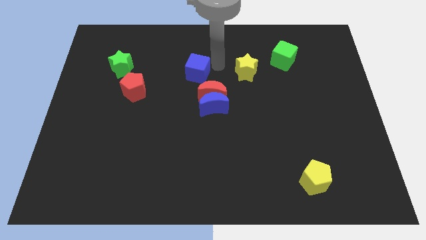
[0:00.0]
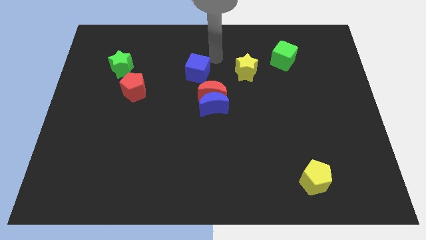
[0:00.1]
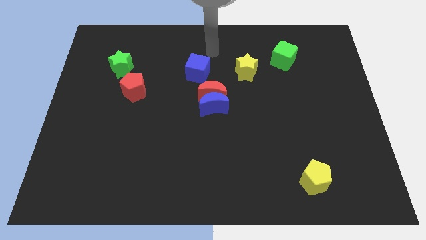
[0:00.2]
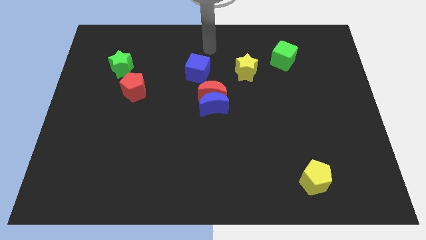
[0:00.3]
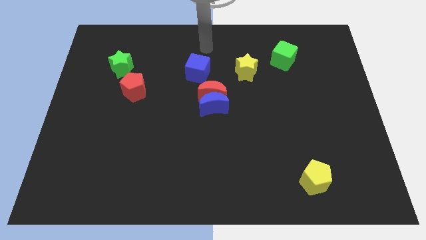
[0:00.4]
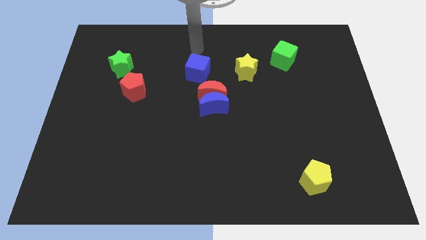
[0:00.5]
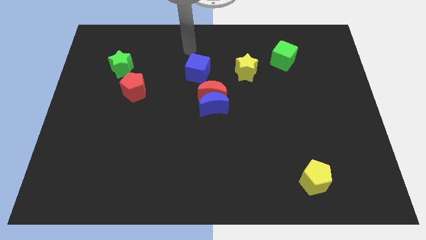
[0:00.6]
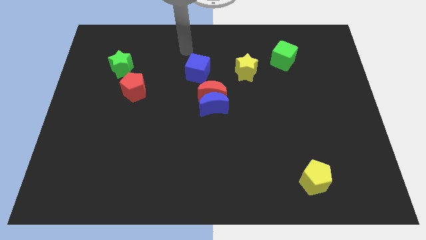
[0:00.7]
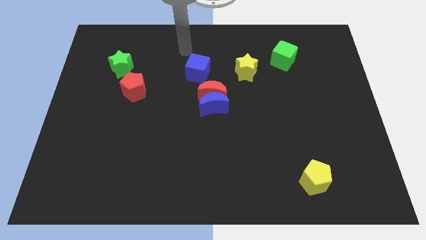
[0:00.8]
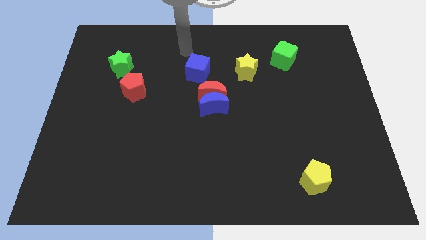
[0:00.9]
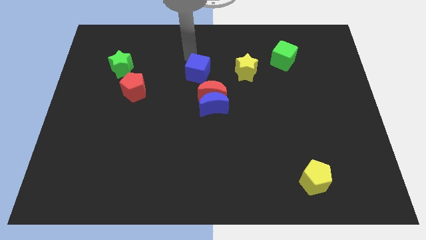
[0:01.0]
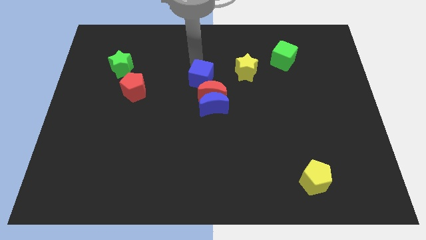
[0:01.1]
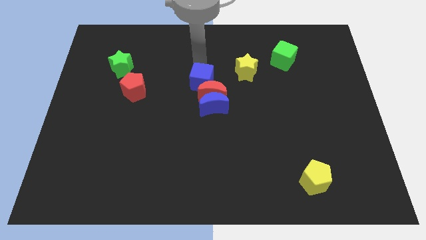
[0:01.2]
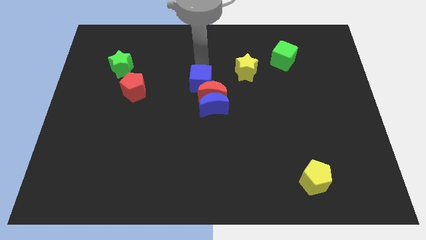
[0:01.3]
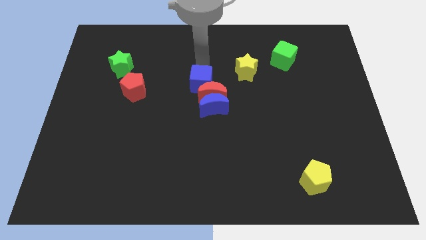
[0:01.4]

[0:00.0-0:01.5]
move blue cube into red moon

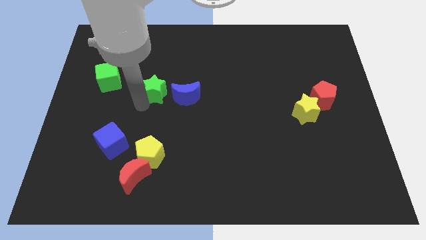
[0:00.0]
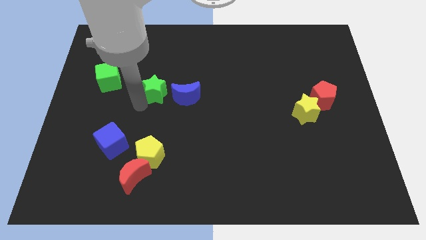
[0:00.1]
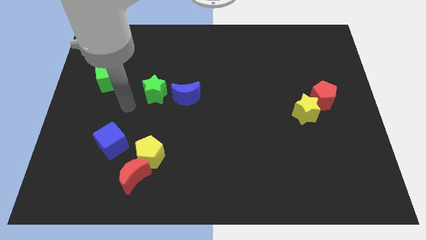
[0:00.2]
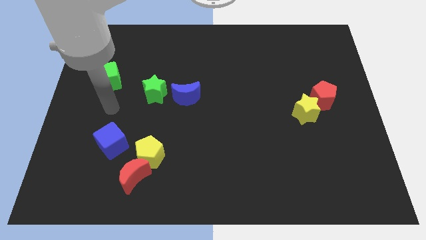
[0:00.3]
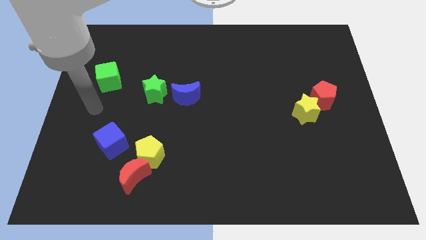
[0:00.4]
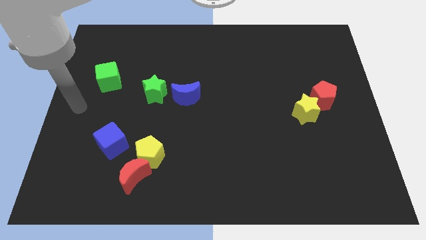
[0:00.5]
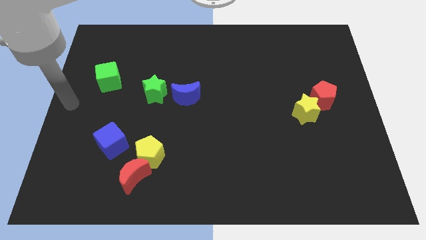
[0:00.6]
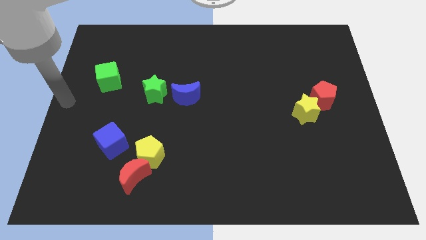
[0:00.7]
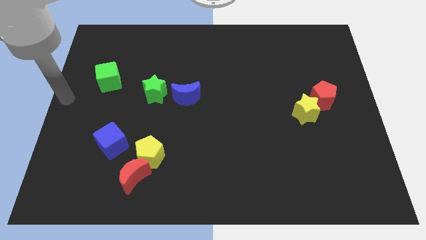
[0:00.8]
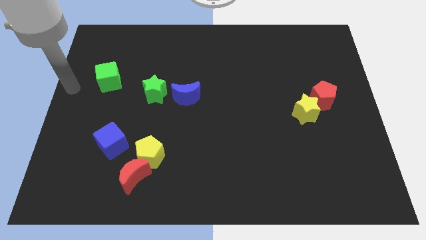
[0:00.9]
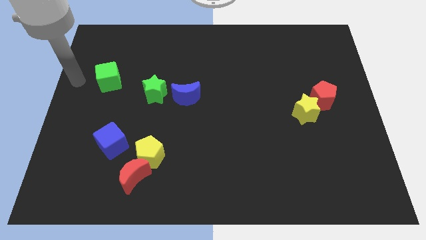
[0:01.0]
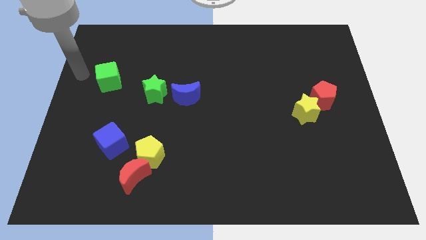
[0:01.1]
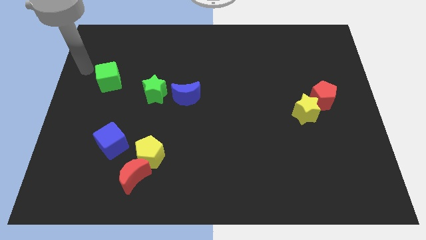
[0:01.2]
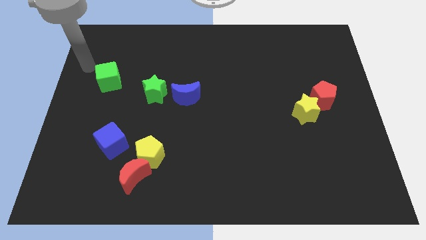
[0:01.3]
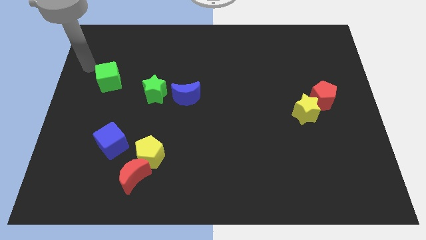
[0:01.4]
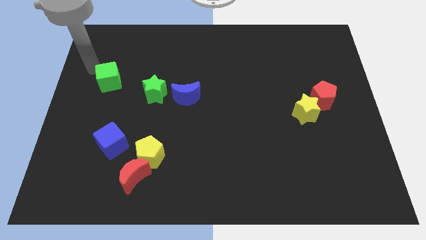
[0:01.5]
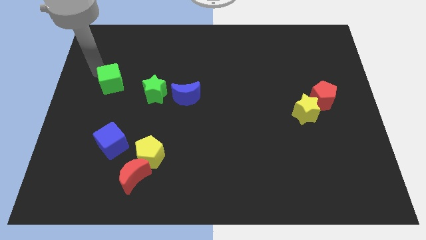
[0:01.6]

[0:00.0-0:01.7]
place the arm diagonally to the green cube

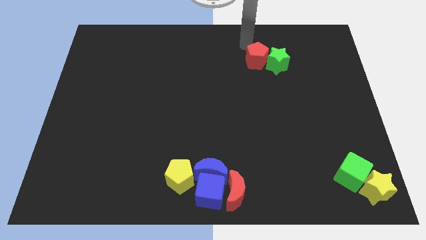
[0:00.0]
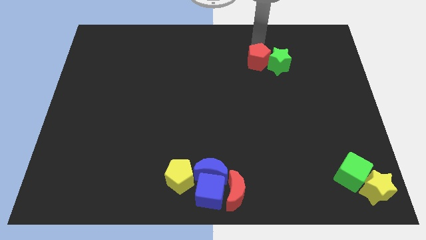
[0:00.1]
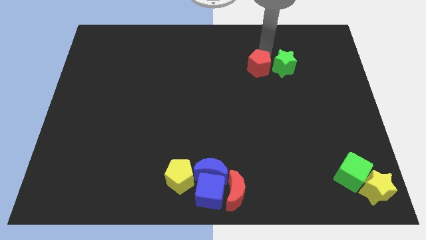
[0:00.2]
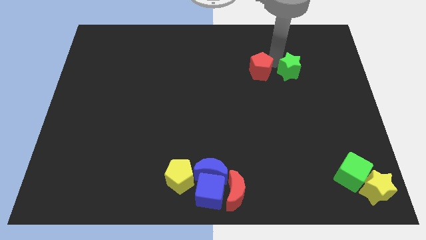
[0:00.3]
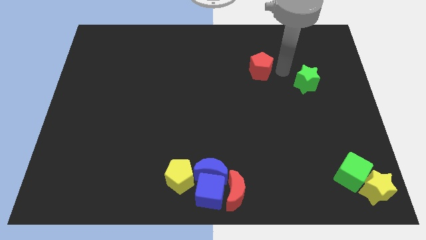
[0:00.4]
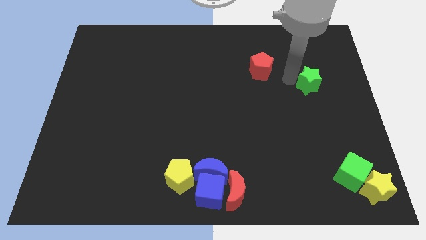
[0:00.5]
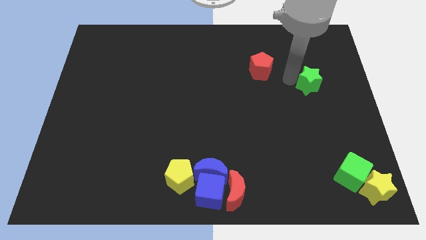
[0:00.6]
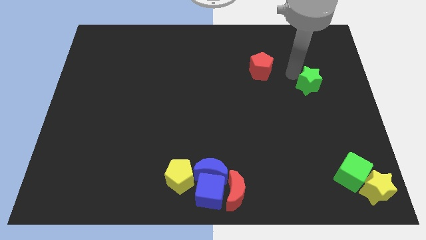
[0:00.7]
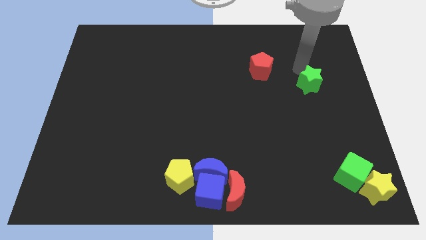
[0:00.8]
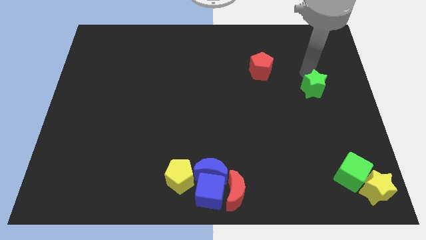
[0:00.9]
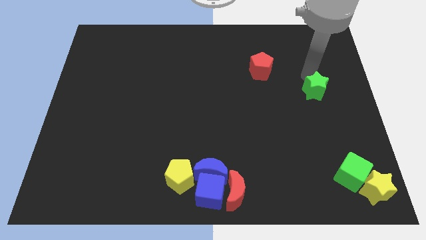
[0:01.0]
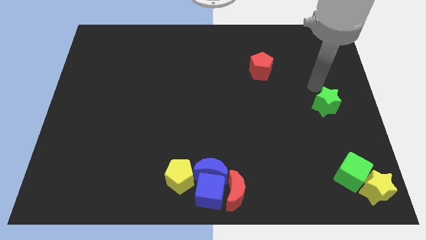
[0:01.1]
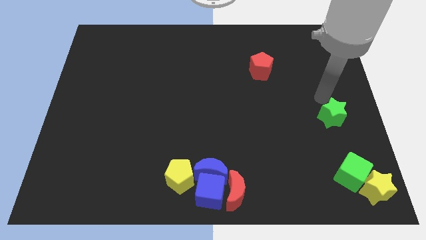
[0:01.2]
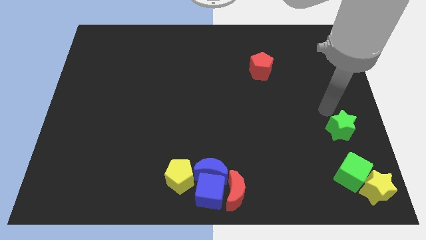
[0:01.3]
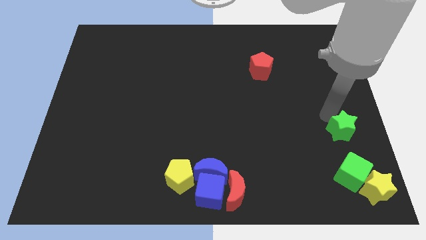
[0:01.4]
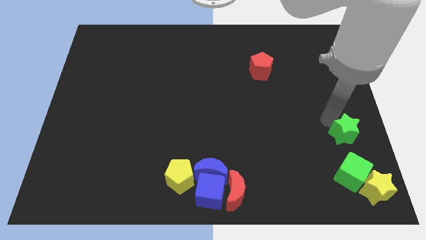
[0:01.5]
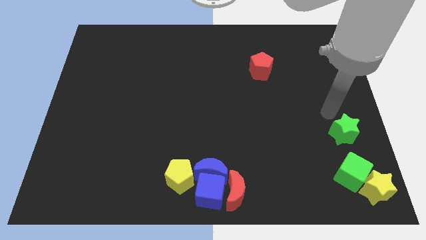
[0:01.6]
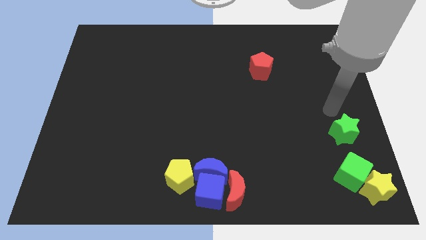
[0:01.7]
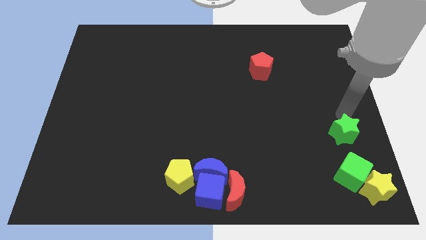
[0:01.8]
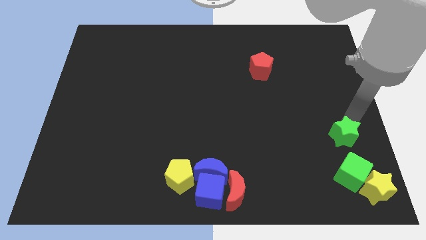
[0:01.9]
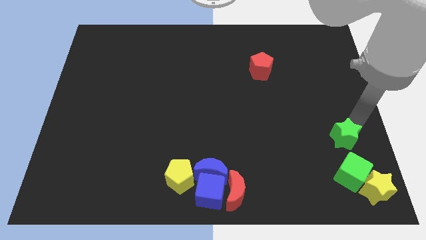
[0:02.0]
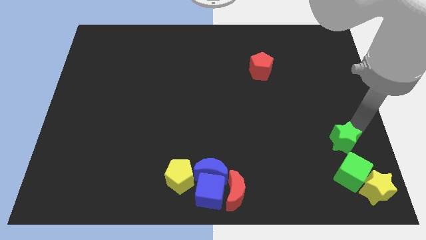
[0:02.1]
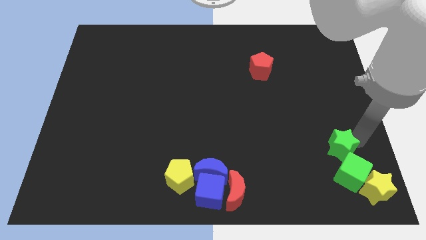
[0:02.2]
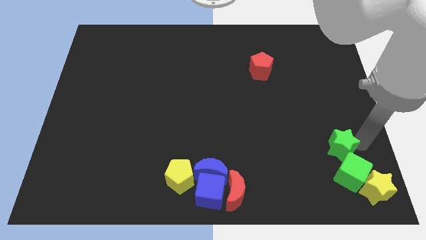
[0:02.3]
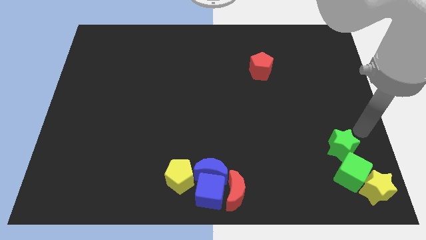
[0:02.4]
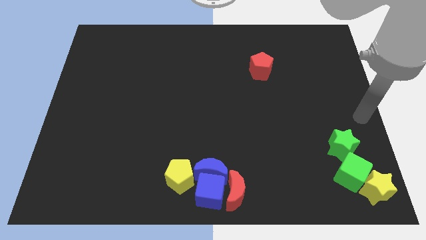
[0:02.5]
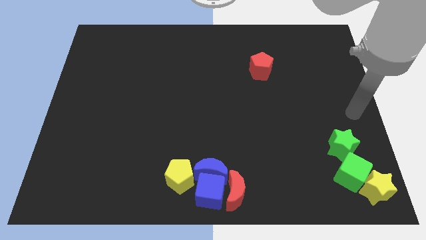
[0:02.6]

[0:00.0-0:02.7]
move the green star towards the green cube

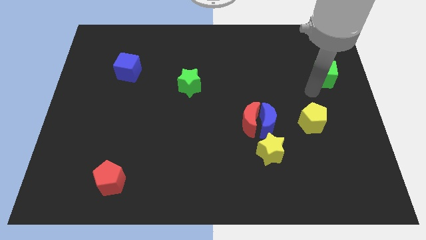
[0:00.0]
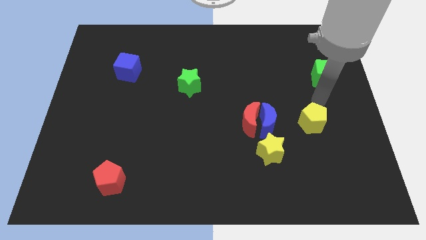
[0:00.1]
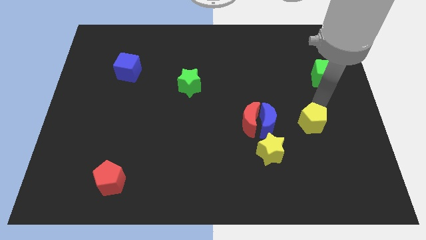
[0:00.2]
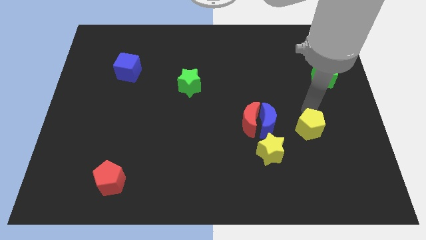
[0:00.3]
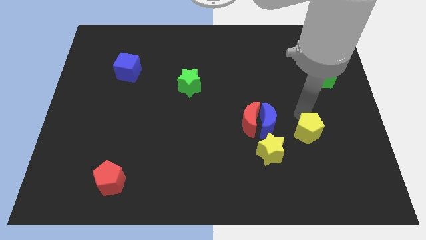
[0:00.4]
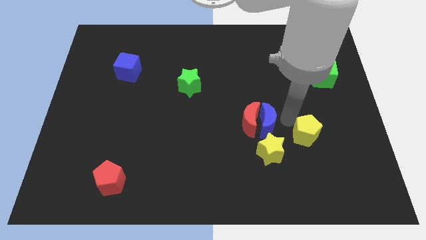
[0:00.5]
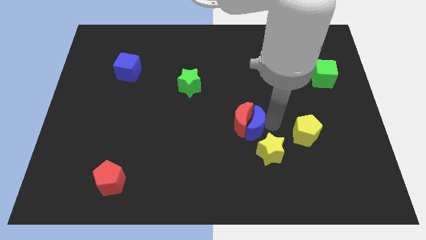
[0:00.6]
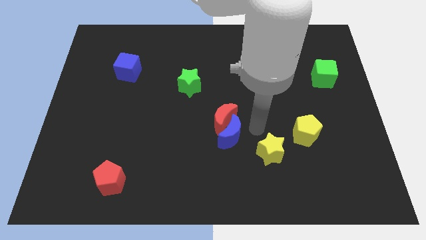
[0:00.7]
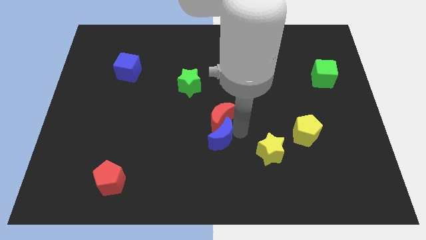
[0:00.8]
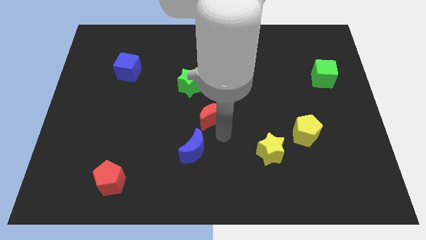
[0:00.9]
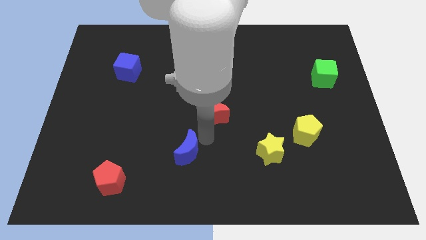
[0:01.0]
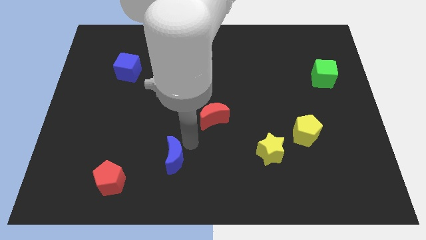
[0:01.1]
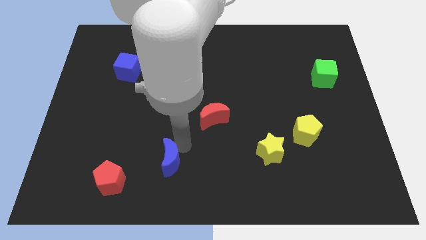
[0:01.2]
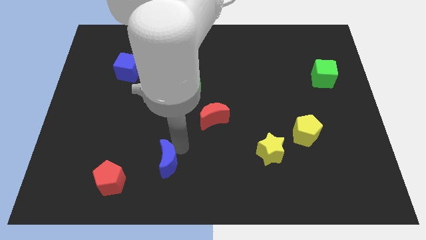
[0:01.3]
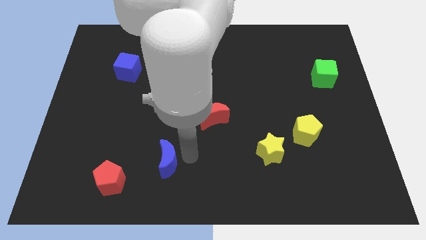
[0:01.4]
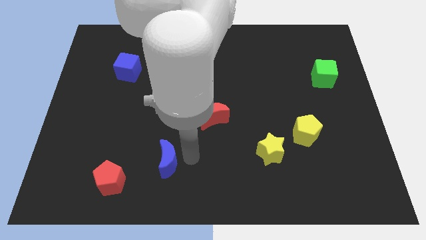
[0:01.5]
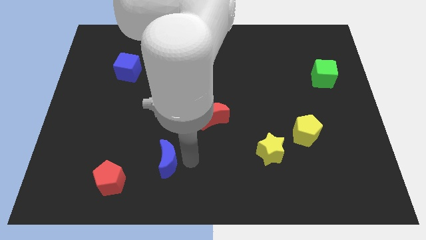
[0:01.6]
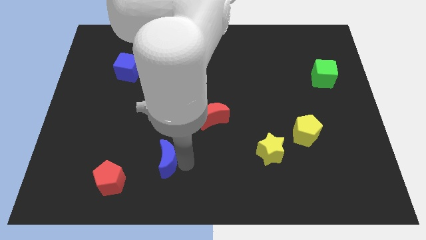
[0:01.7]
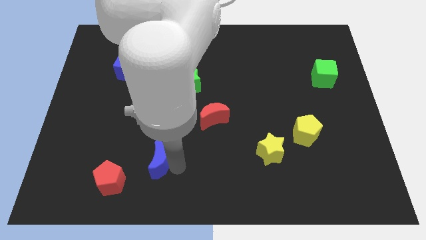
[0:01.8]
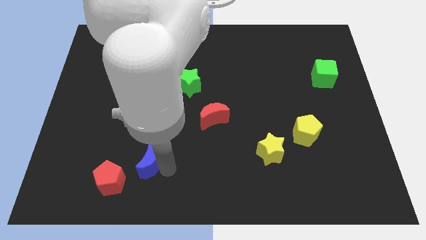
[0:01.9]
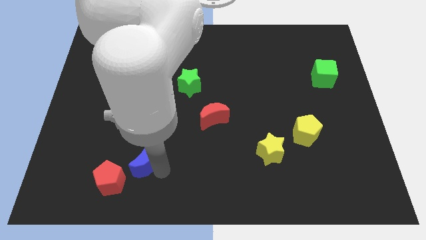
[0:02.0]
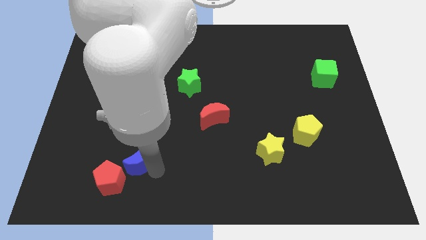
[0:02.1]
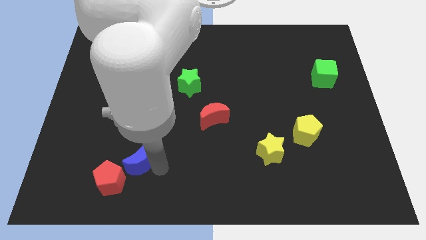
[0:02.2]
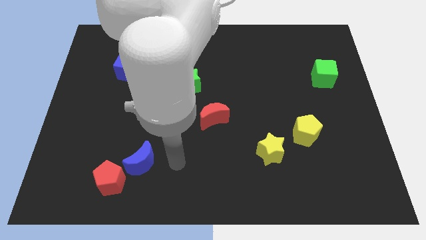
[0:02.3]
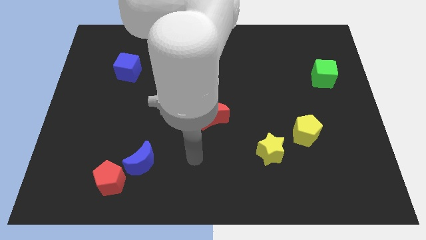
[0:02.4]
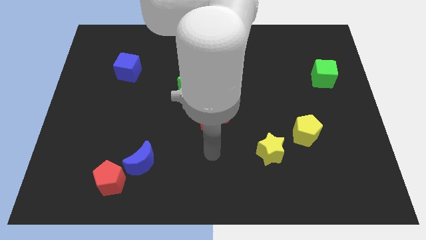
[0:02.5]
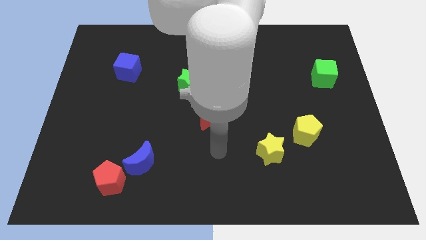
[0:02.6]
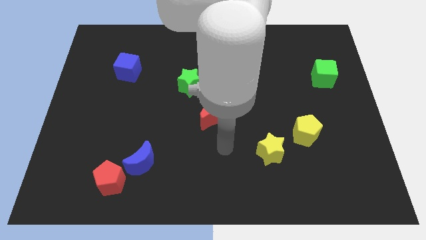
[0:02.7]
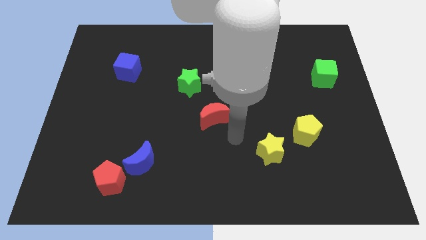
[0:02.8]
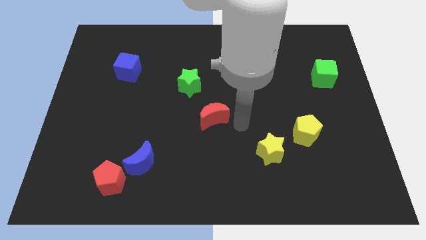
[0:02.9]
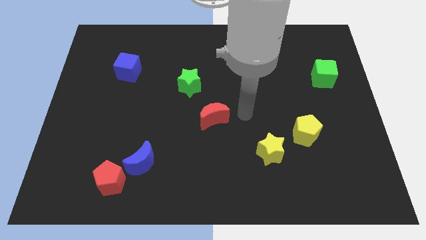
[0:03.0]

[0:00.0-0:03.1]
push the blue moon away from the red moon
